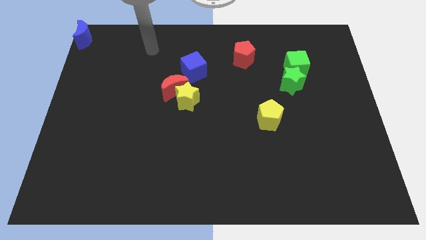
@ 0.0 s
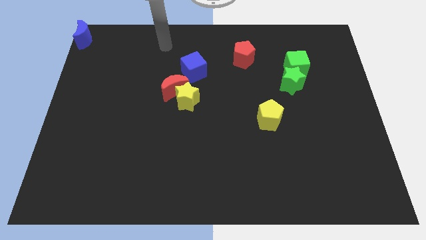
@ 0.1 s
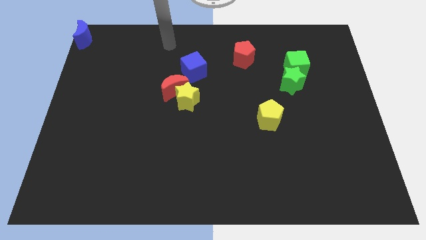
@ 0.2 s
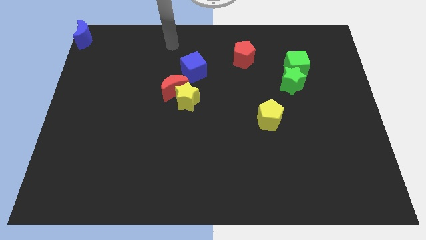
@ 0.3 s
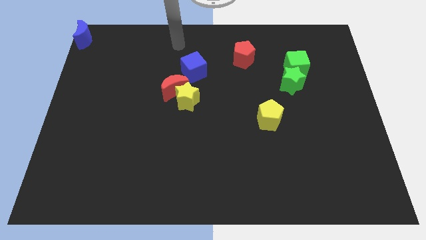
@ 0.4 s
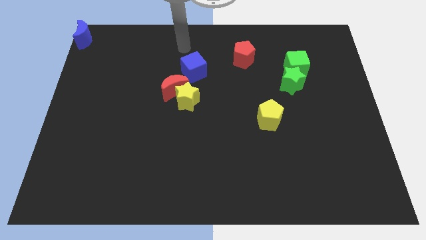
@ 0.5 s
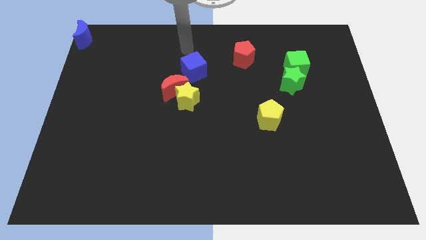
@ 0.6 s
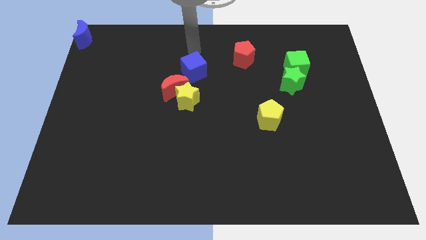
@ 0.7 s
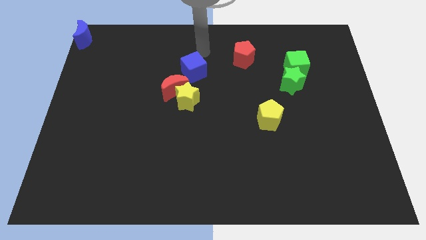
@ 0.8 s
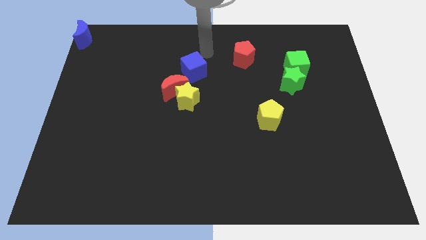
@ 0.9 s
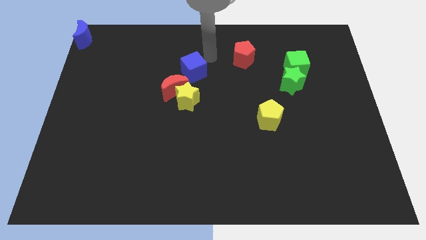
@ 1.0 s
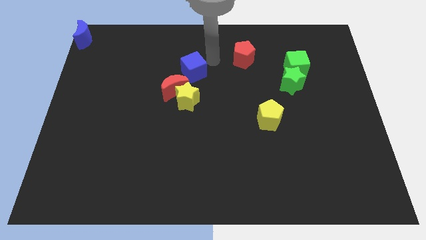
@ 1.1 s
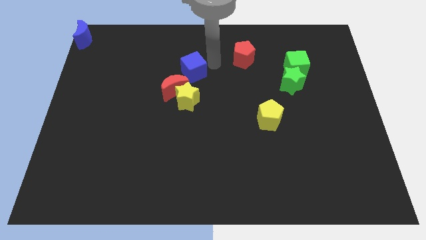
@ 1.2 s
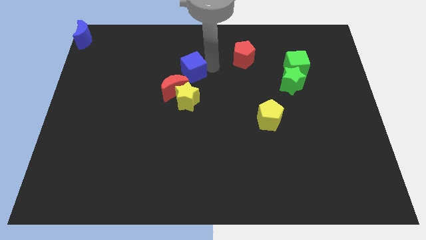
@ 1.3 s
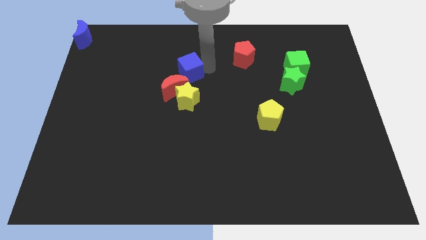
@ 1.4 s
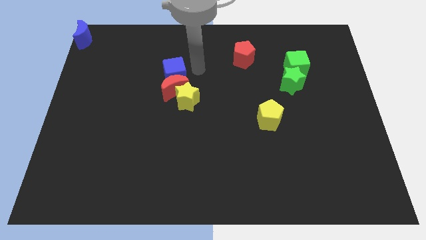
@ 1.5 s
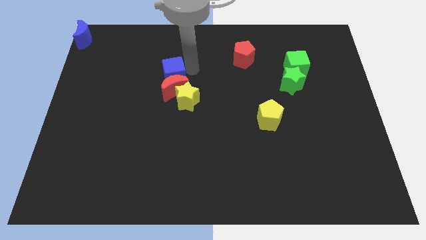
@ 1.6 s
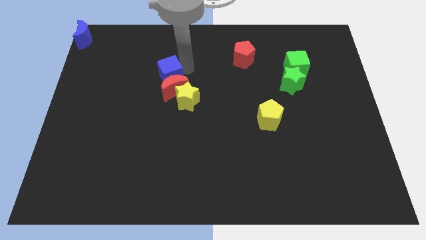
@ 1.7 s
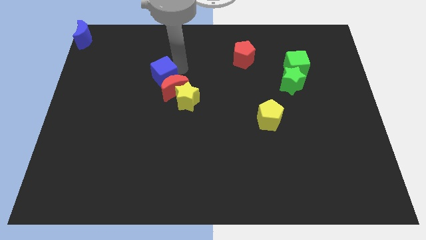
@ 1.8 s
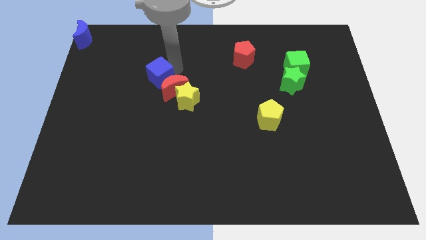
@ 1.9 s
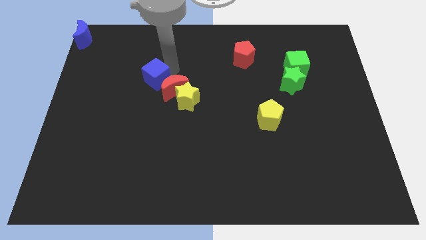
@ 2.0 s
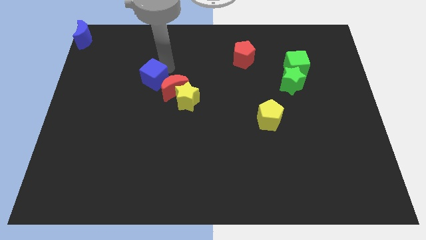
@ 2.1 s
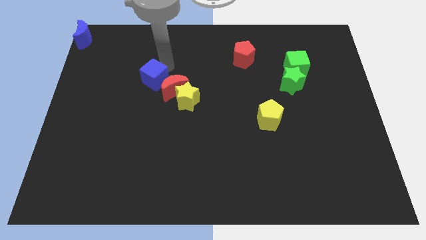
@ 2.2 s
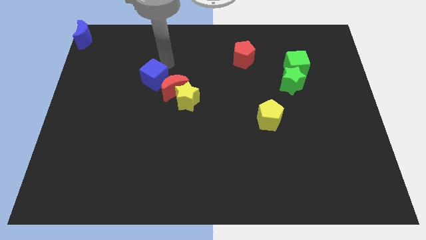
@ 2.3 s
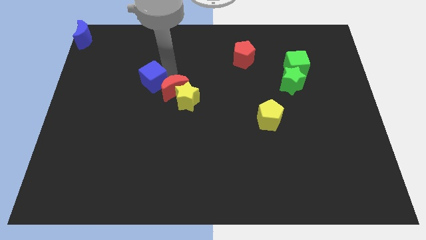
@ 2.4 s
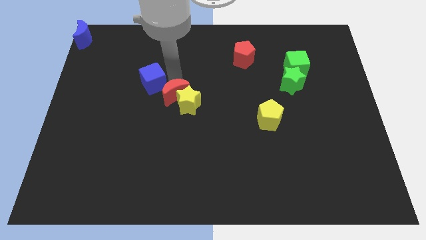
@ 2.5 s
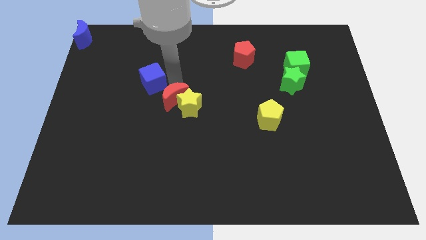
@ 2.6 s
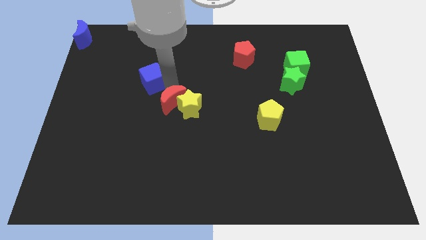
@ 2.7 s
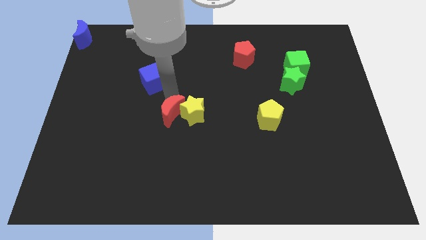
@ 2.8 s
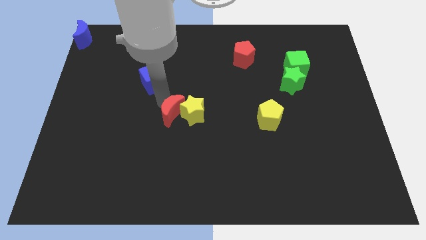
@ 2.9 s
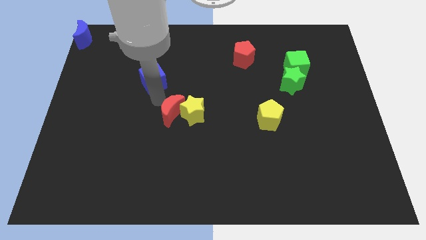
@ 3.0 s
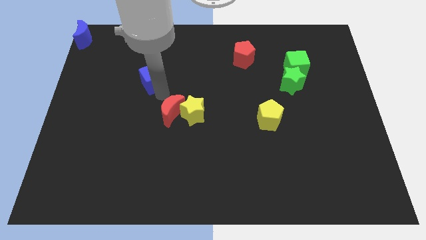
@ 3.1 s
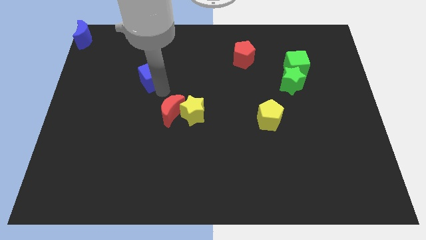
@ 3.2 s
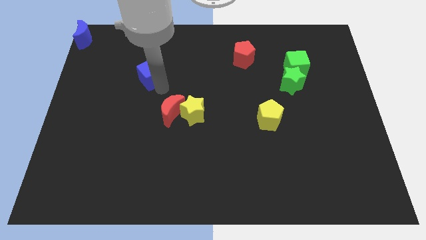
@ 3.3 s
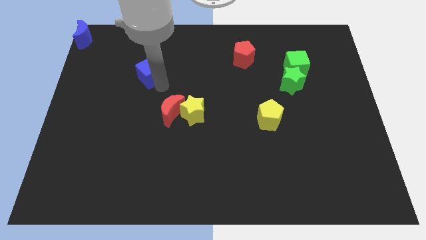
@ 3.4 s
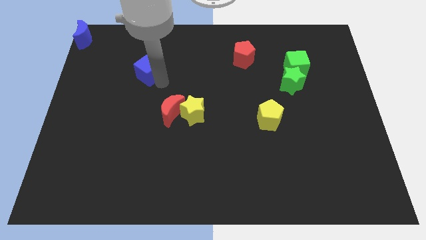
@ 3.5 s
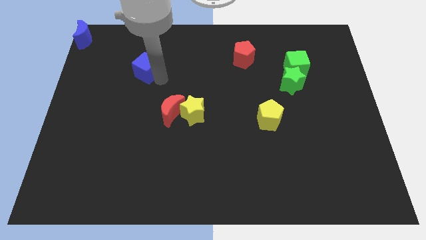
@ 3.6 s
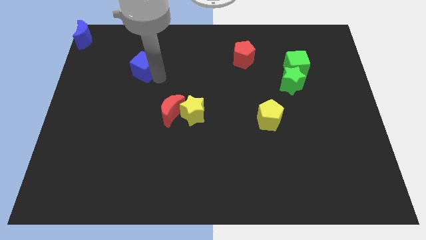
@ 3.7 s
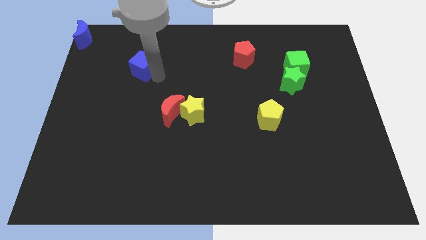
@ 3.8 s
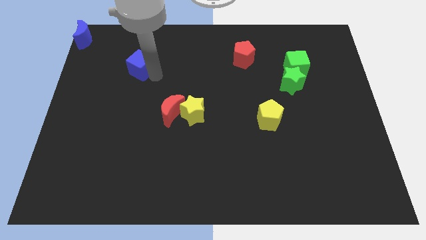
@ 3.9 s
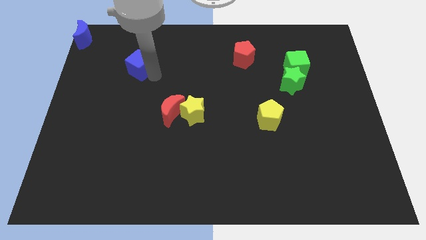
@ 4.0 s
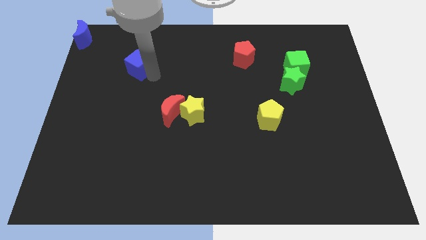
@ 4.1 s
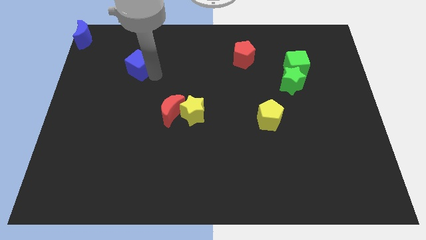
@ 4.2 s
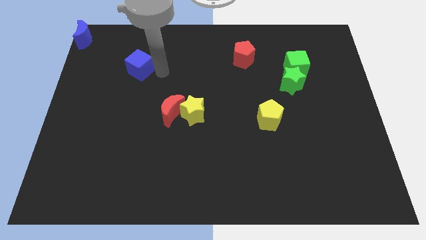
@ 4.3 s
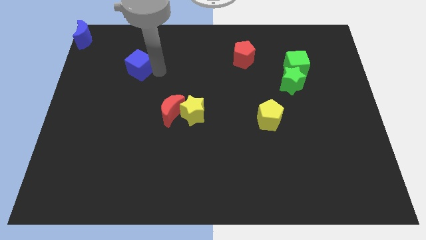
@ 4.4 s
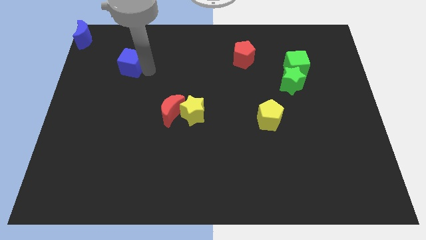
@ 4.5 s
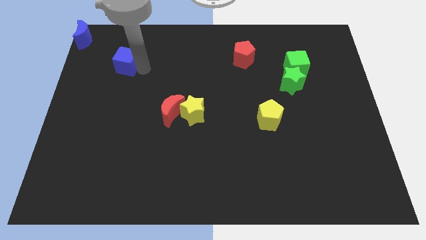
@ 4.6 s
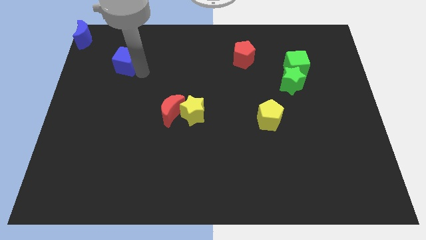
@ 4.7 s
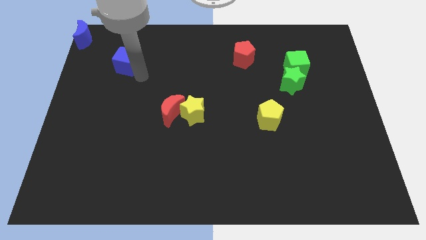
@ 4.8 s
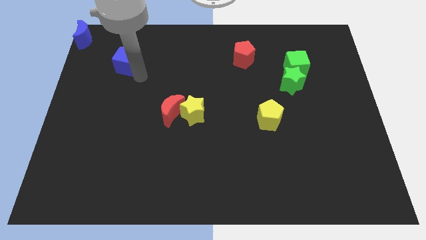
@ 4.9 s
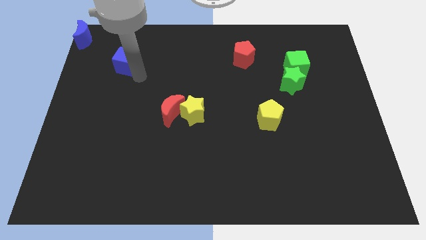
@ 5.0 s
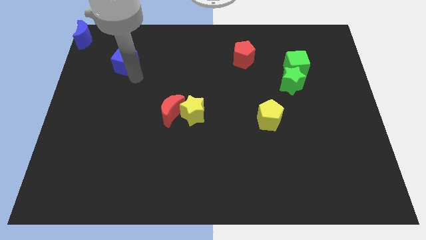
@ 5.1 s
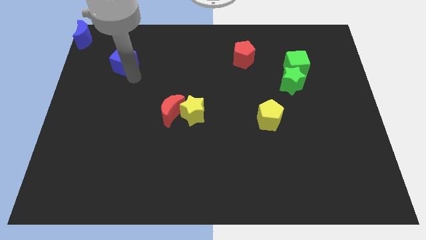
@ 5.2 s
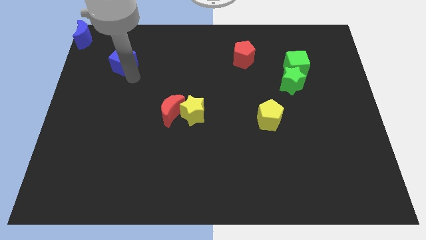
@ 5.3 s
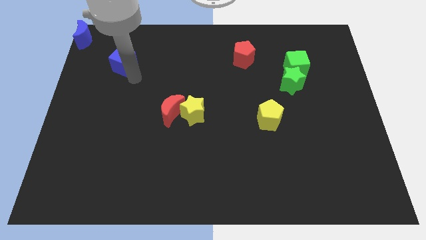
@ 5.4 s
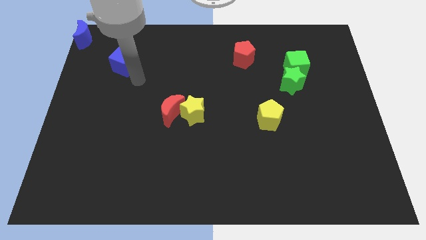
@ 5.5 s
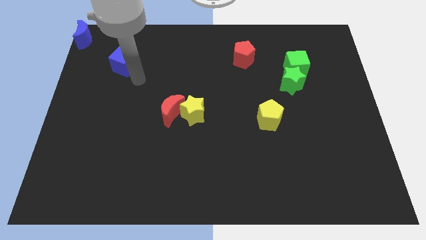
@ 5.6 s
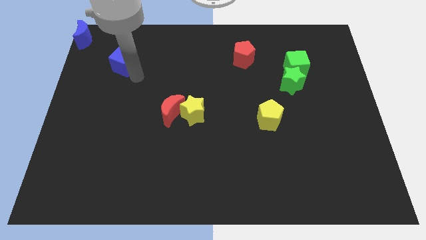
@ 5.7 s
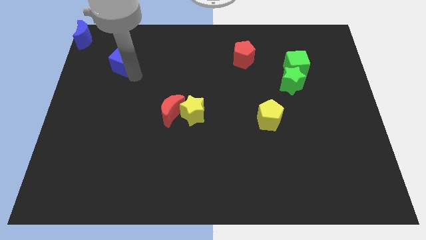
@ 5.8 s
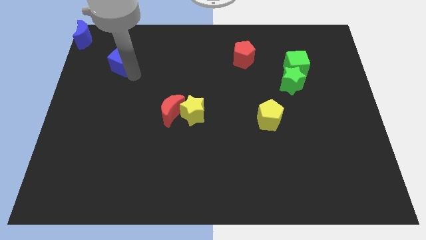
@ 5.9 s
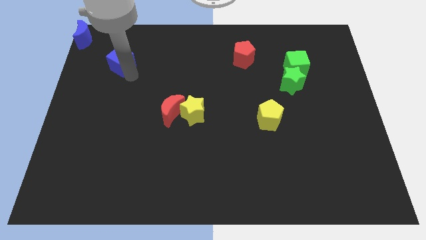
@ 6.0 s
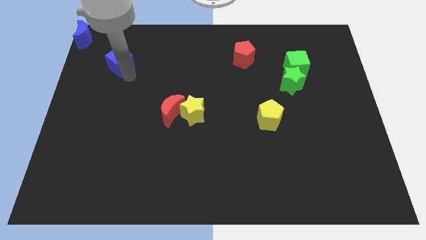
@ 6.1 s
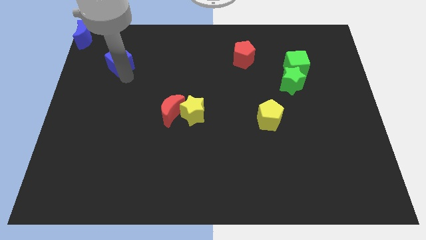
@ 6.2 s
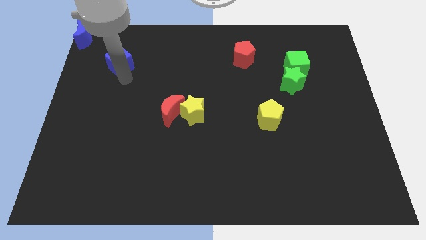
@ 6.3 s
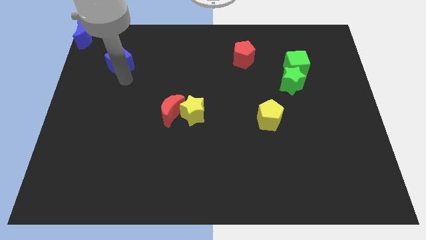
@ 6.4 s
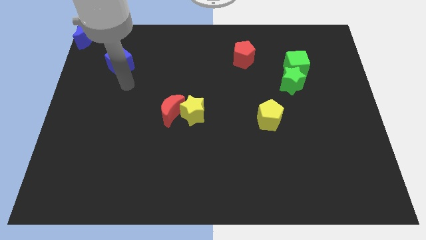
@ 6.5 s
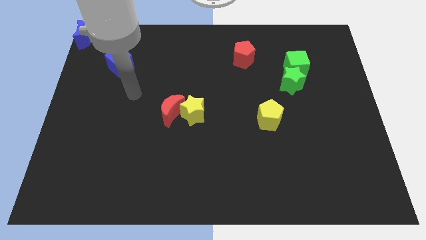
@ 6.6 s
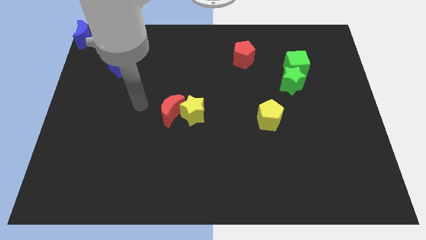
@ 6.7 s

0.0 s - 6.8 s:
place the blue cube diagonally in between the blue crescent and the red crescent

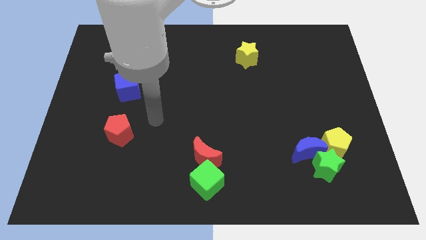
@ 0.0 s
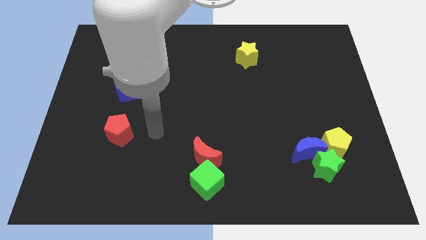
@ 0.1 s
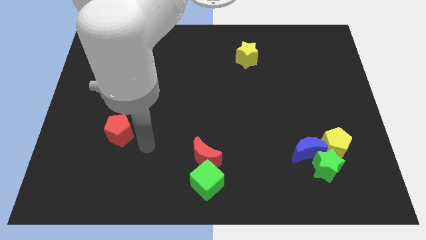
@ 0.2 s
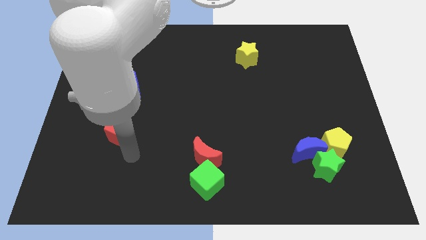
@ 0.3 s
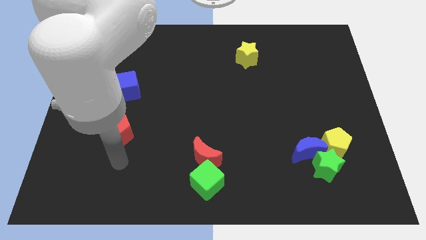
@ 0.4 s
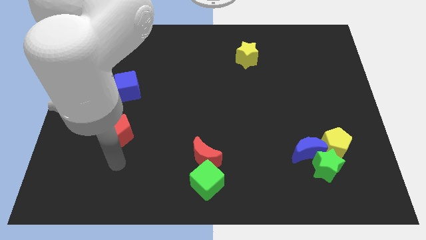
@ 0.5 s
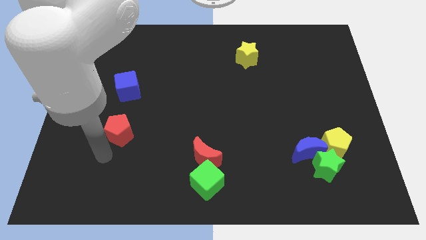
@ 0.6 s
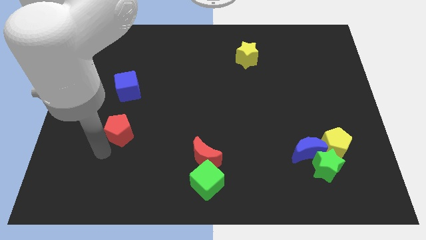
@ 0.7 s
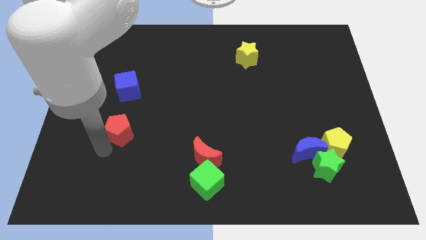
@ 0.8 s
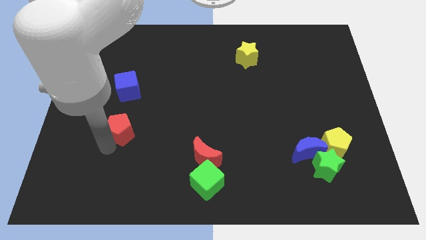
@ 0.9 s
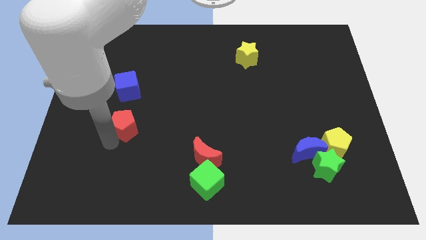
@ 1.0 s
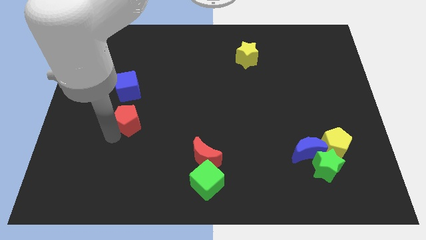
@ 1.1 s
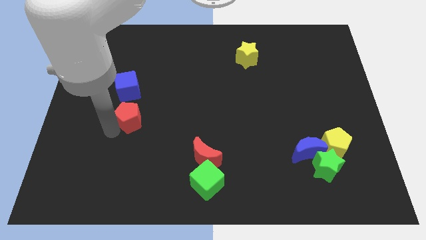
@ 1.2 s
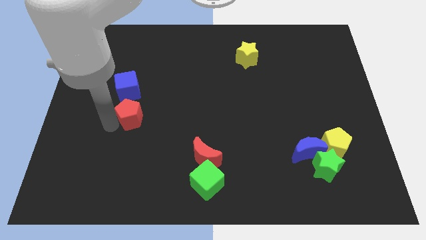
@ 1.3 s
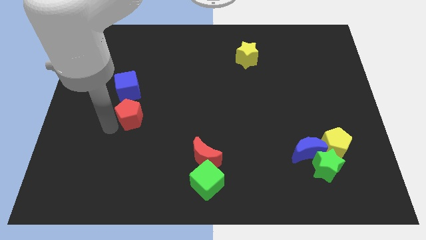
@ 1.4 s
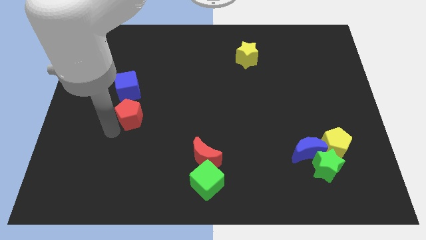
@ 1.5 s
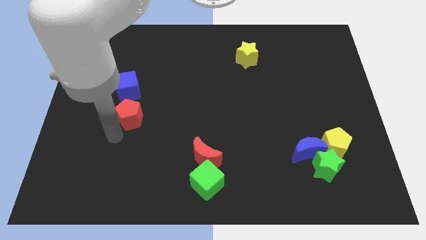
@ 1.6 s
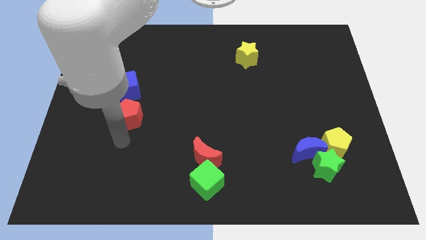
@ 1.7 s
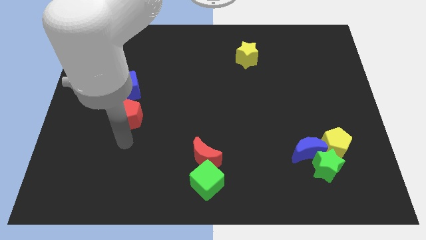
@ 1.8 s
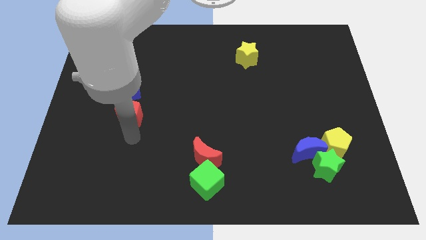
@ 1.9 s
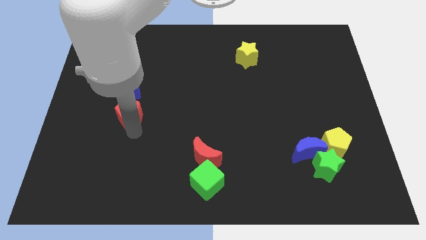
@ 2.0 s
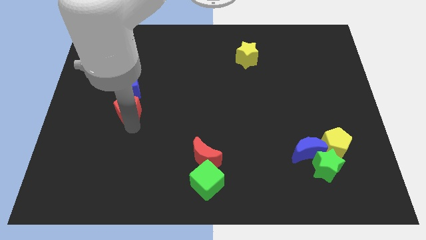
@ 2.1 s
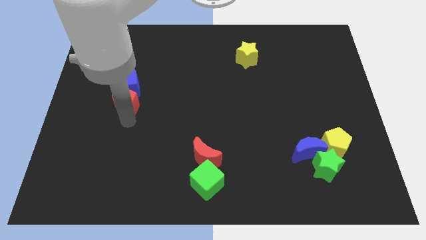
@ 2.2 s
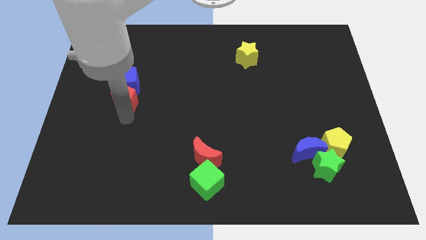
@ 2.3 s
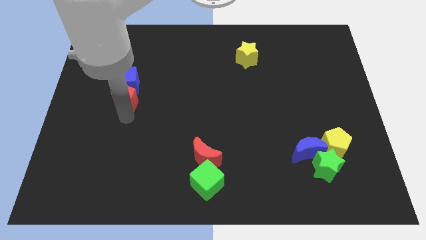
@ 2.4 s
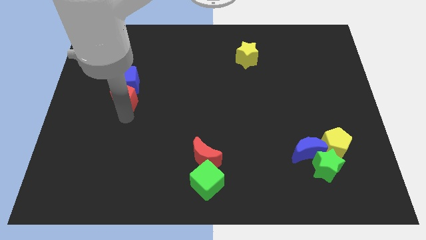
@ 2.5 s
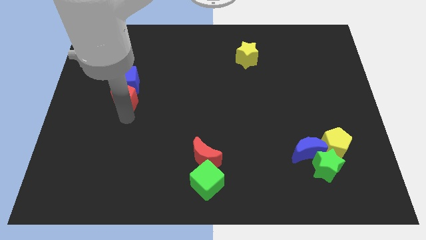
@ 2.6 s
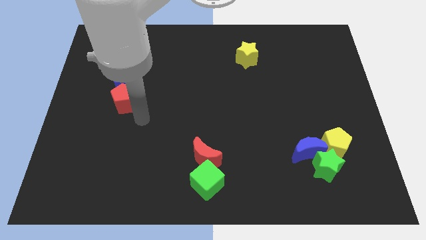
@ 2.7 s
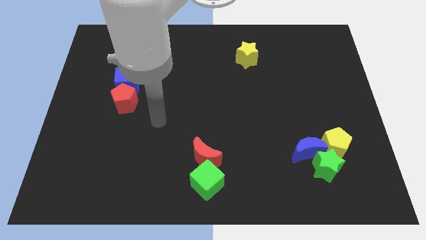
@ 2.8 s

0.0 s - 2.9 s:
push the red pentagon along with blue cube towards top
